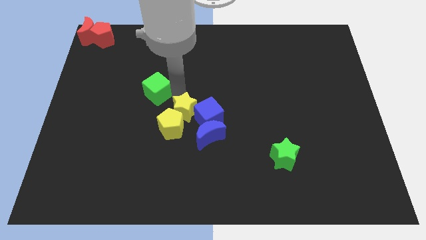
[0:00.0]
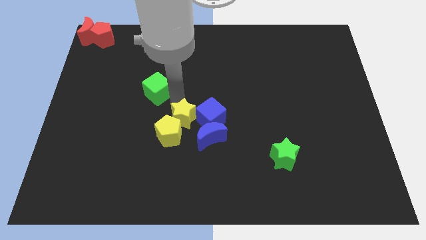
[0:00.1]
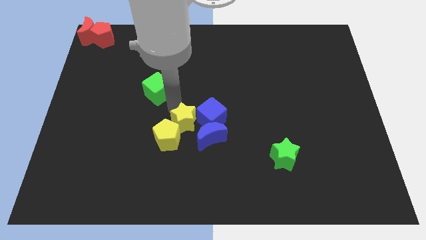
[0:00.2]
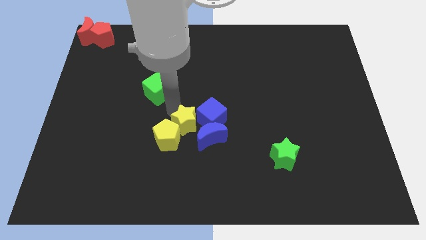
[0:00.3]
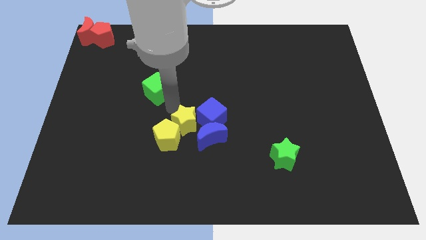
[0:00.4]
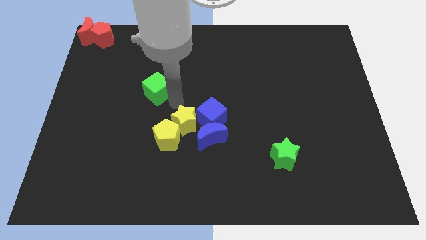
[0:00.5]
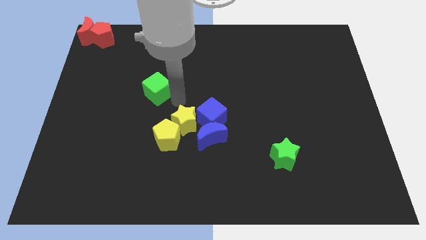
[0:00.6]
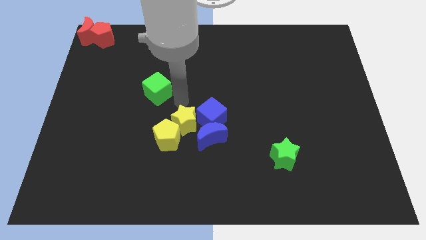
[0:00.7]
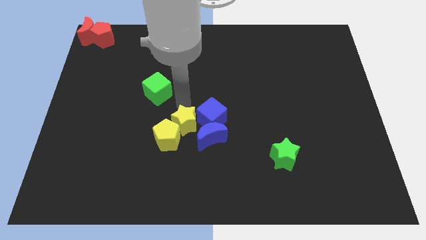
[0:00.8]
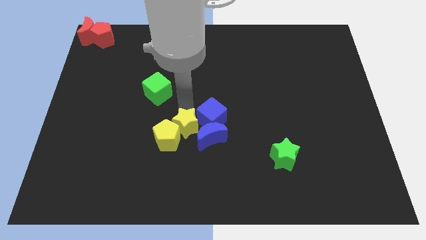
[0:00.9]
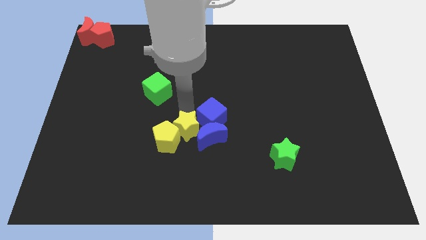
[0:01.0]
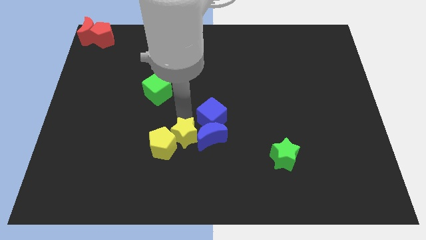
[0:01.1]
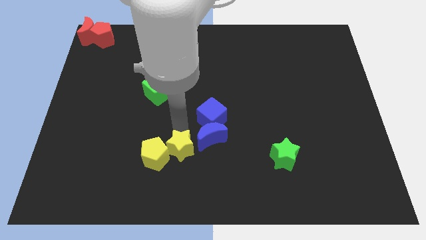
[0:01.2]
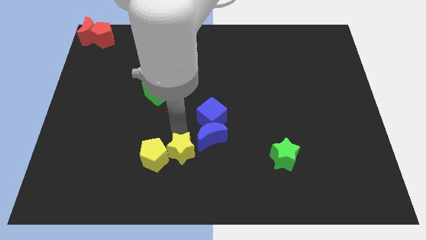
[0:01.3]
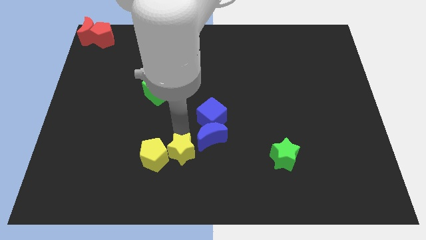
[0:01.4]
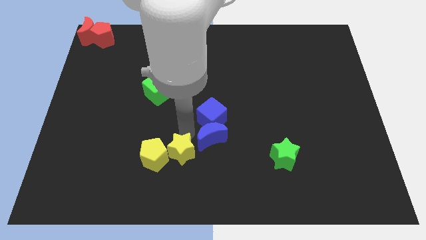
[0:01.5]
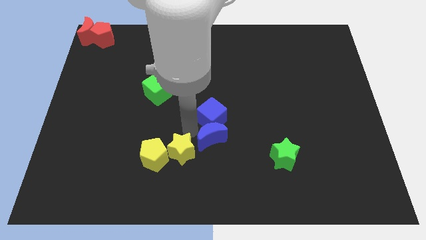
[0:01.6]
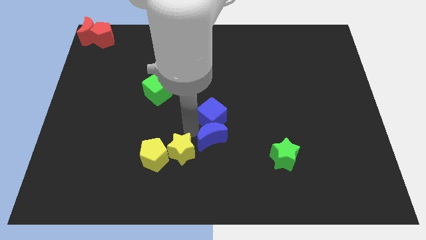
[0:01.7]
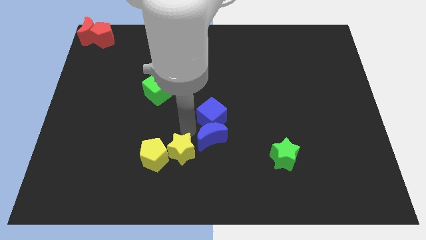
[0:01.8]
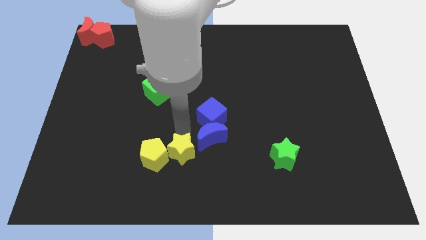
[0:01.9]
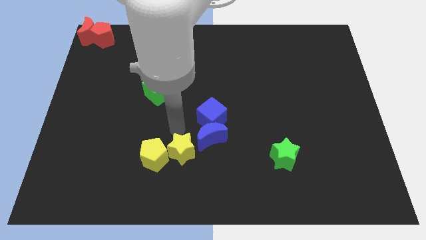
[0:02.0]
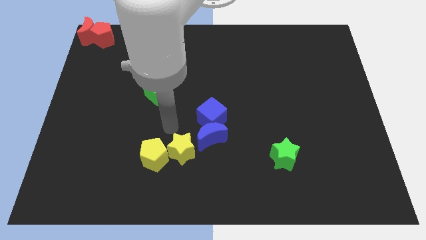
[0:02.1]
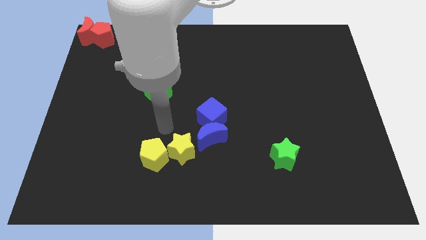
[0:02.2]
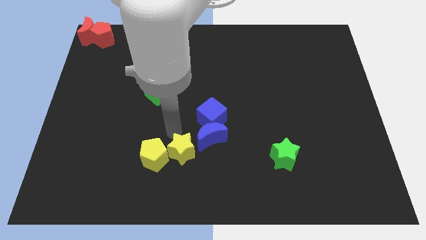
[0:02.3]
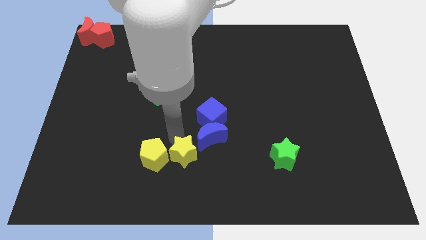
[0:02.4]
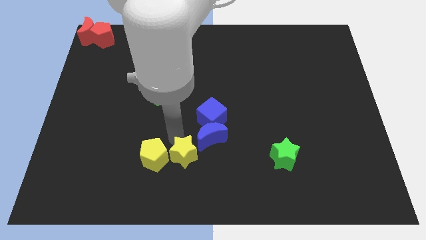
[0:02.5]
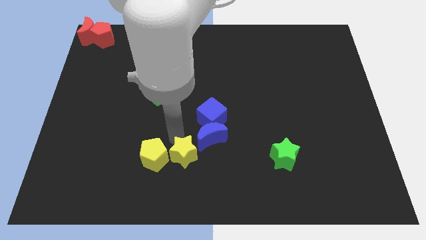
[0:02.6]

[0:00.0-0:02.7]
place yellow star in between yellow pentagon and blue crescent

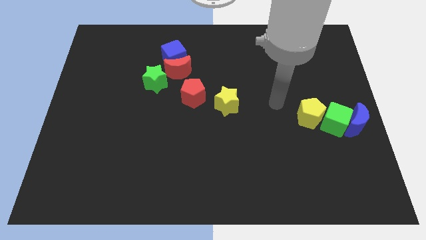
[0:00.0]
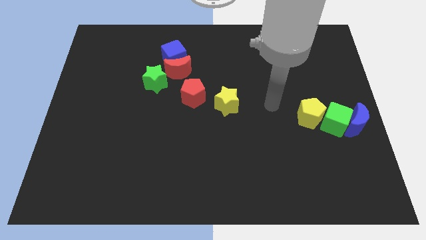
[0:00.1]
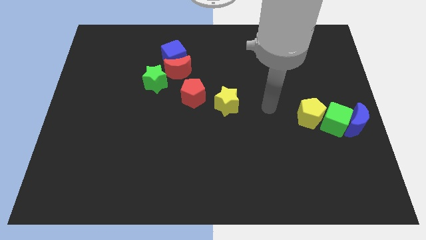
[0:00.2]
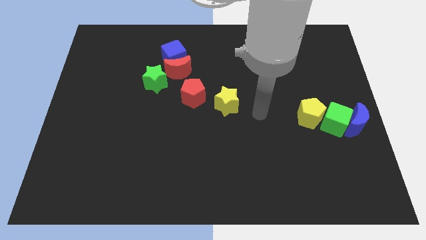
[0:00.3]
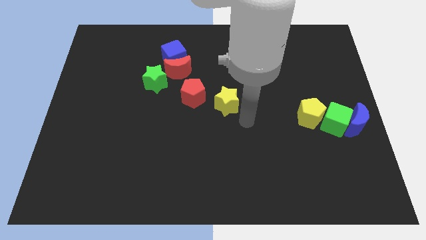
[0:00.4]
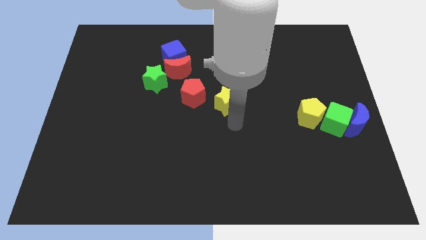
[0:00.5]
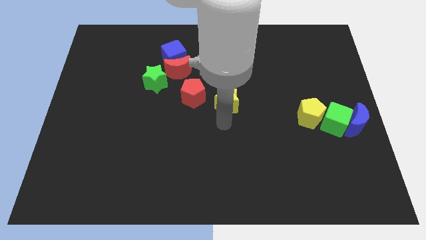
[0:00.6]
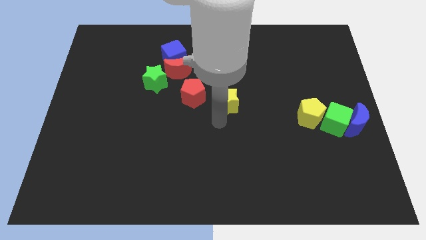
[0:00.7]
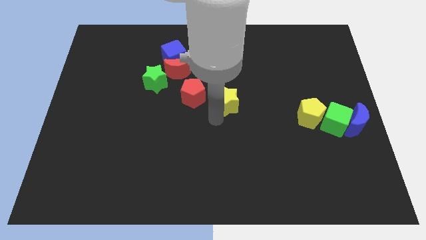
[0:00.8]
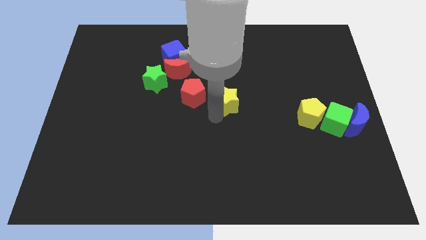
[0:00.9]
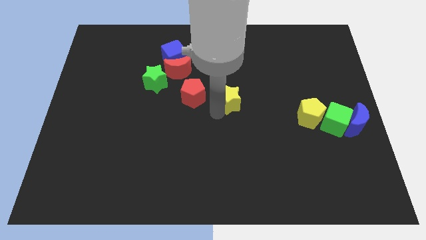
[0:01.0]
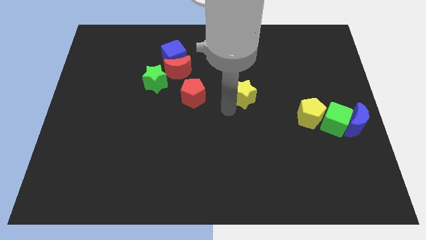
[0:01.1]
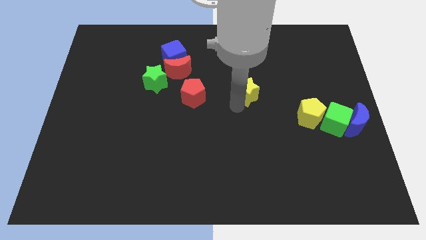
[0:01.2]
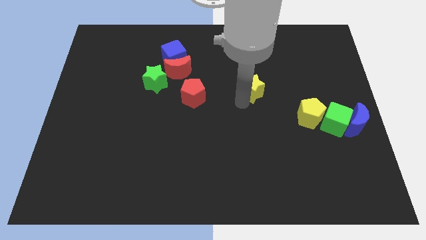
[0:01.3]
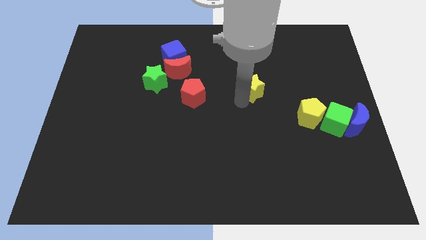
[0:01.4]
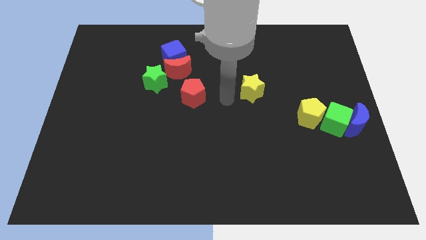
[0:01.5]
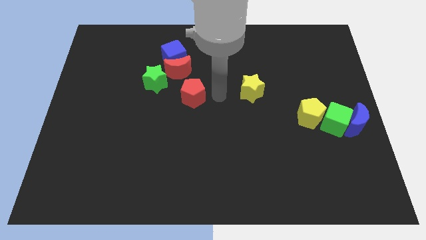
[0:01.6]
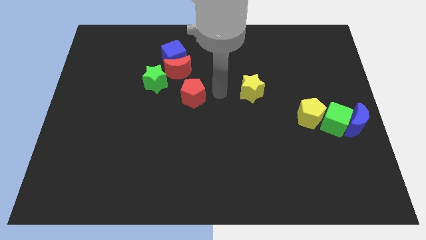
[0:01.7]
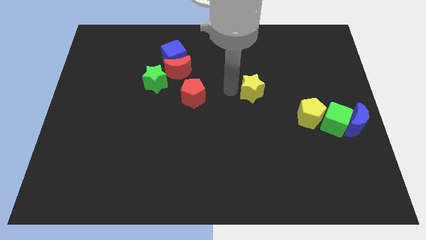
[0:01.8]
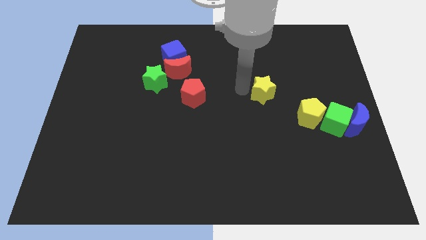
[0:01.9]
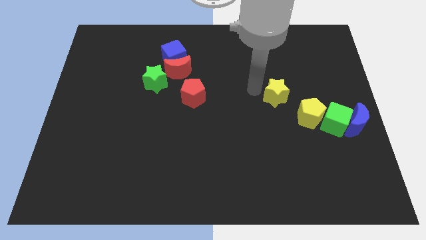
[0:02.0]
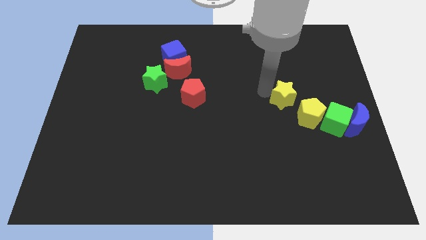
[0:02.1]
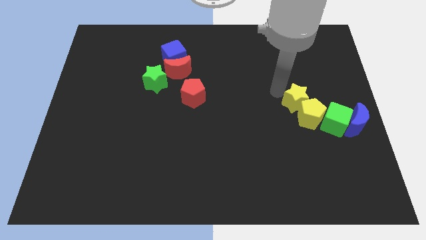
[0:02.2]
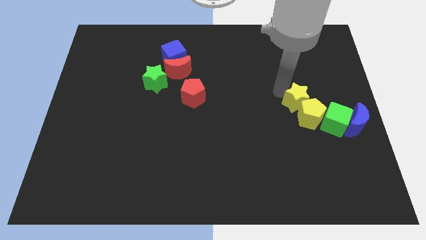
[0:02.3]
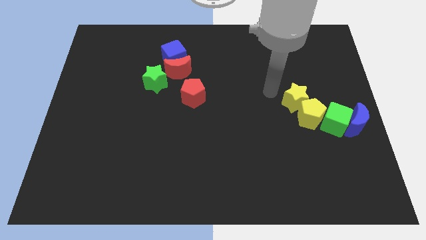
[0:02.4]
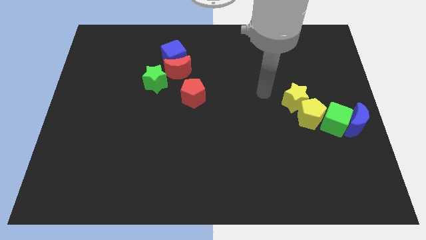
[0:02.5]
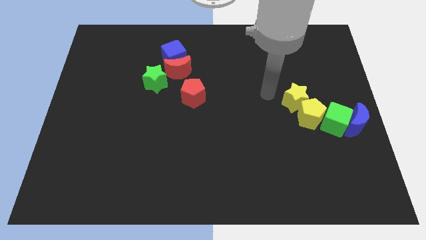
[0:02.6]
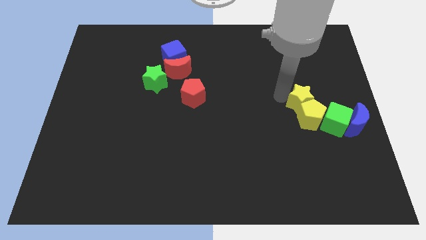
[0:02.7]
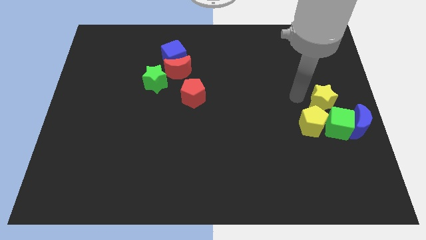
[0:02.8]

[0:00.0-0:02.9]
push yellow star above yellow pentagon

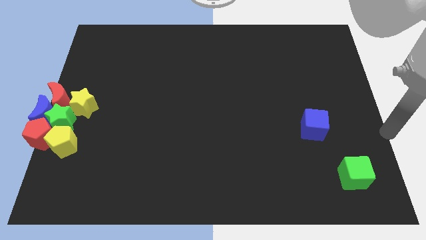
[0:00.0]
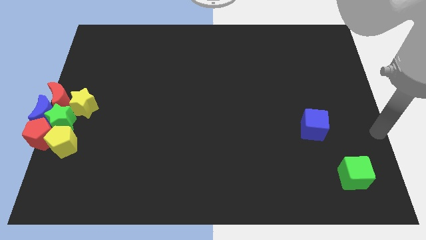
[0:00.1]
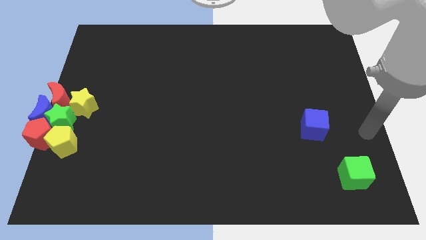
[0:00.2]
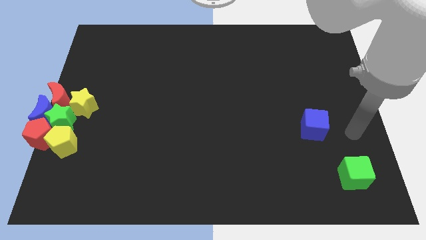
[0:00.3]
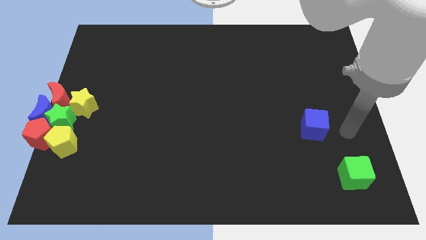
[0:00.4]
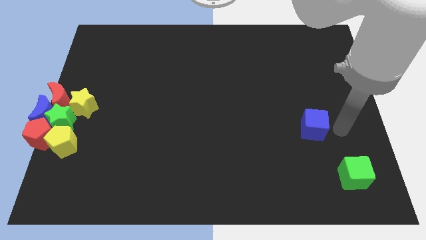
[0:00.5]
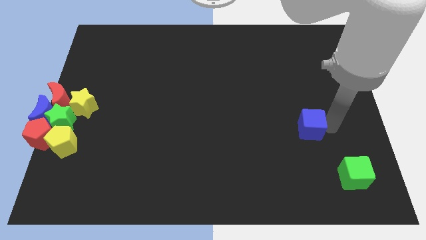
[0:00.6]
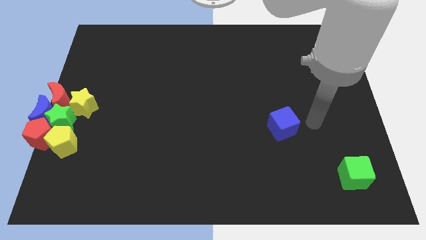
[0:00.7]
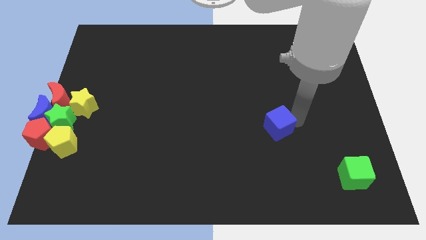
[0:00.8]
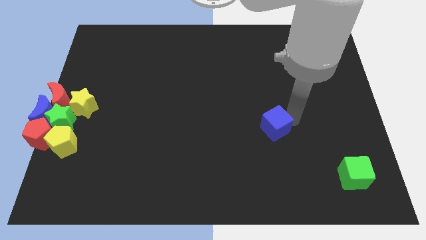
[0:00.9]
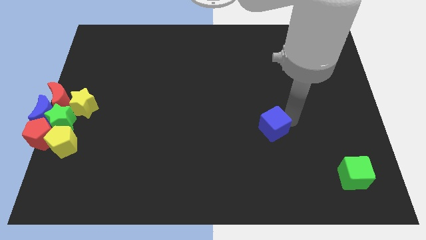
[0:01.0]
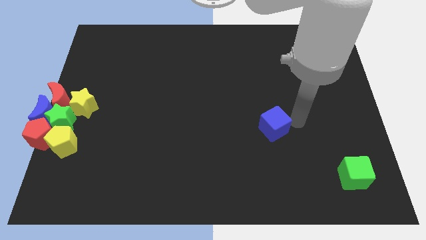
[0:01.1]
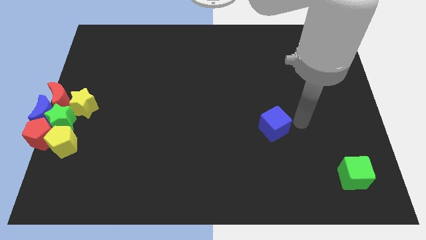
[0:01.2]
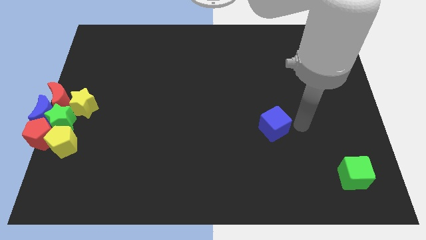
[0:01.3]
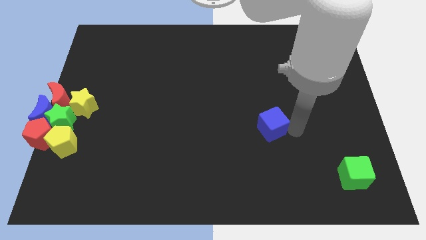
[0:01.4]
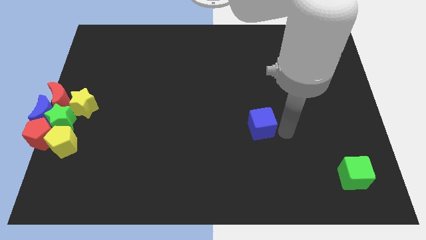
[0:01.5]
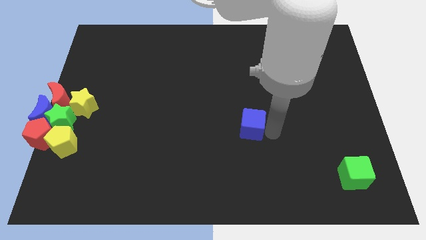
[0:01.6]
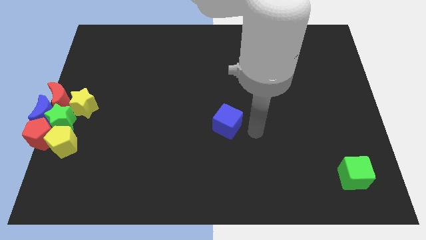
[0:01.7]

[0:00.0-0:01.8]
push the blue cube to the left of the board

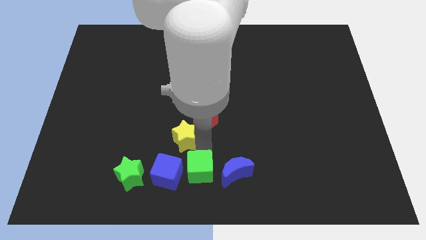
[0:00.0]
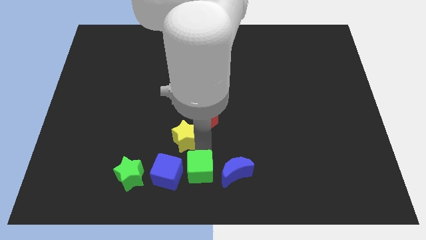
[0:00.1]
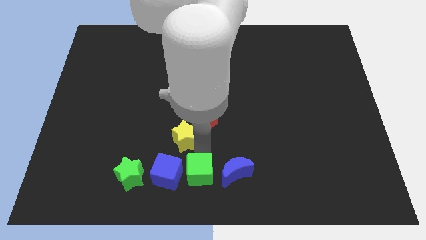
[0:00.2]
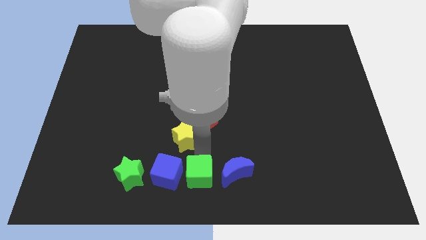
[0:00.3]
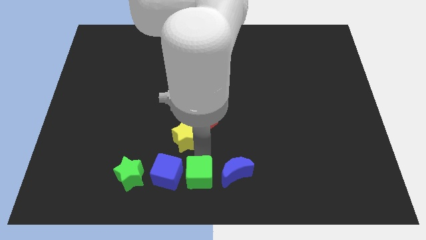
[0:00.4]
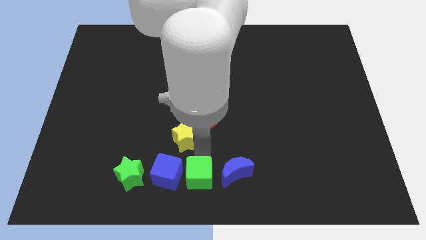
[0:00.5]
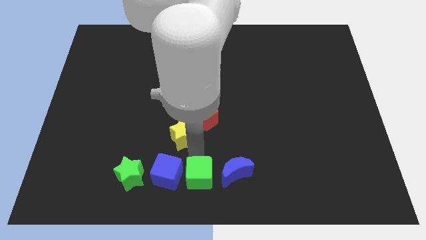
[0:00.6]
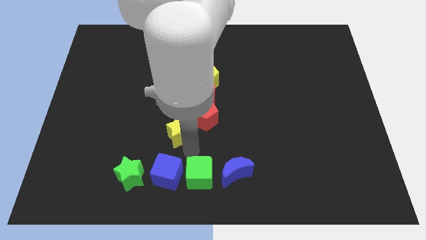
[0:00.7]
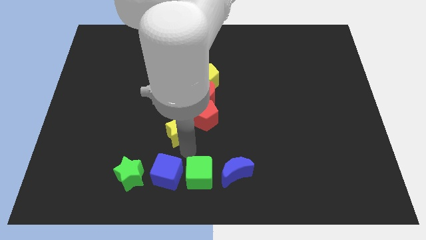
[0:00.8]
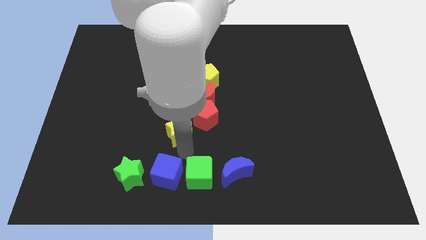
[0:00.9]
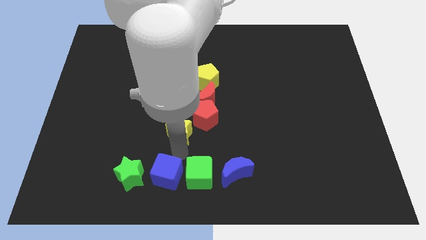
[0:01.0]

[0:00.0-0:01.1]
separate yellow star from green cube

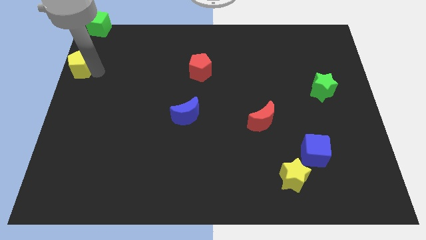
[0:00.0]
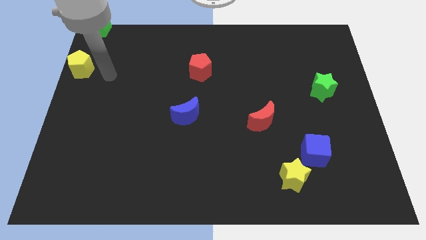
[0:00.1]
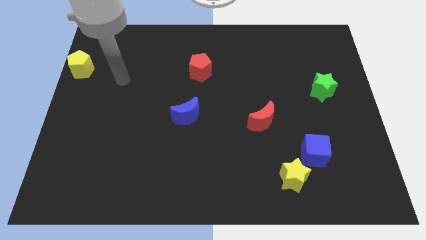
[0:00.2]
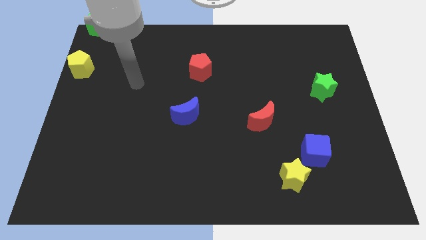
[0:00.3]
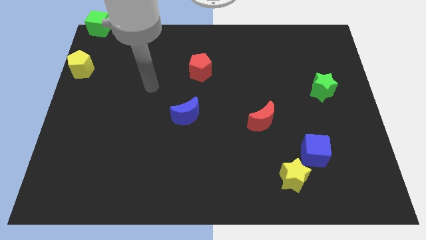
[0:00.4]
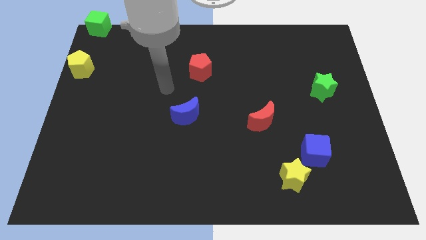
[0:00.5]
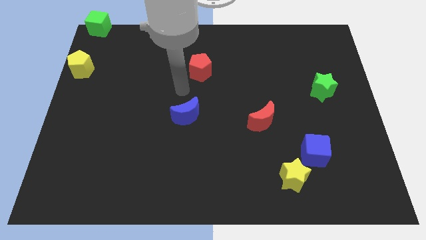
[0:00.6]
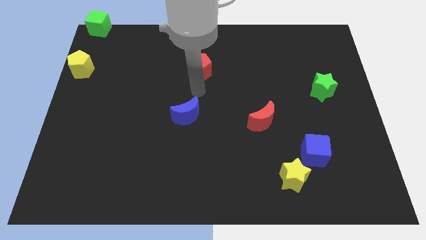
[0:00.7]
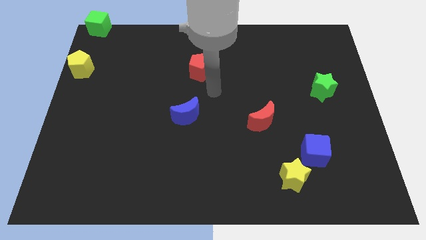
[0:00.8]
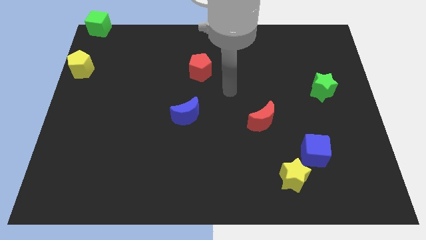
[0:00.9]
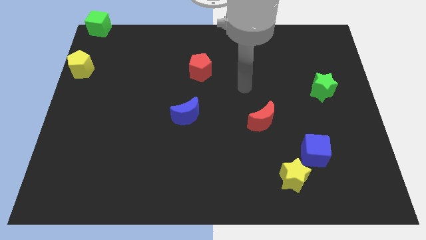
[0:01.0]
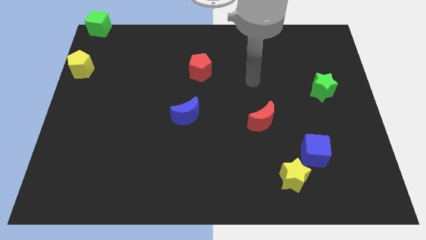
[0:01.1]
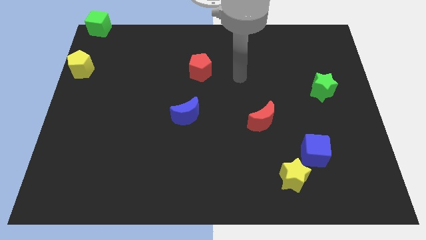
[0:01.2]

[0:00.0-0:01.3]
go away from the yellow pentagon
